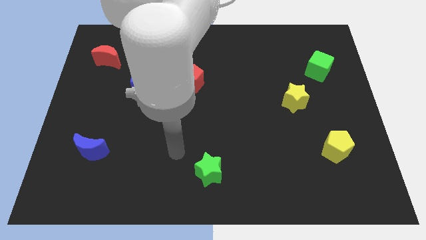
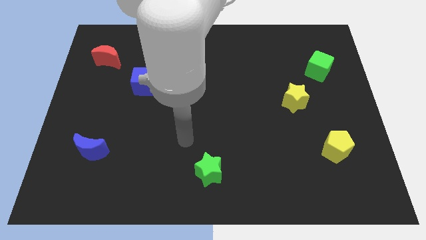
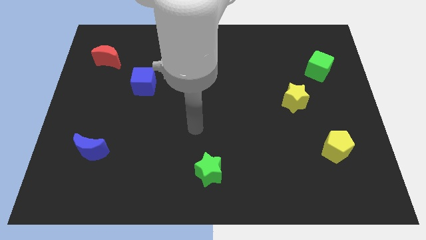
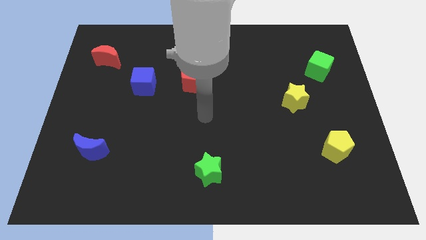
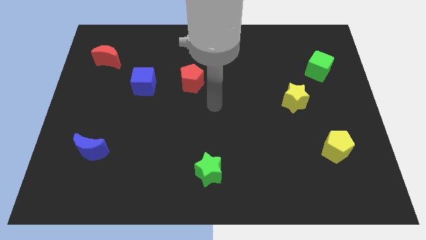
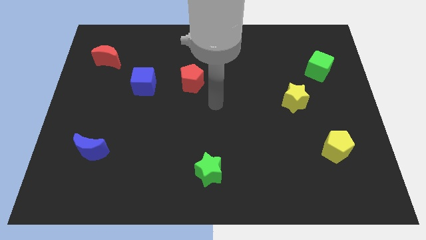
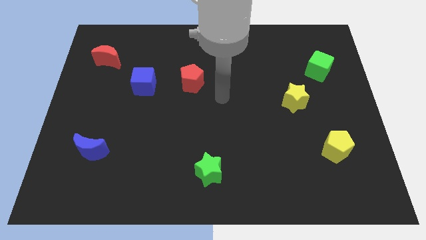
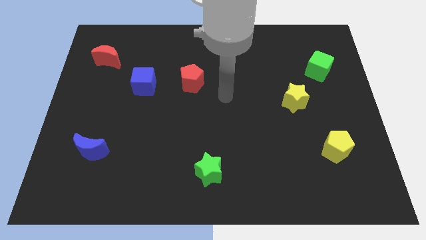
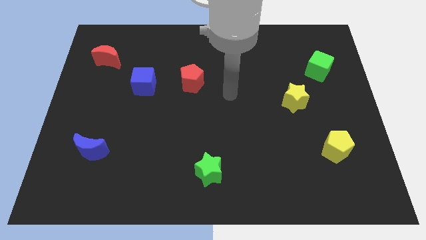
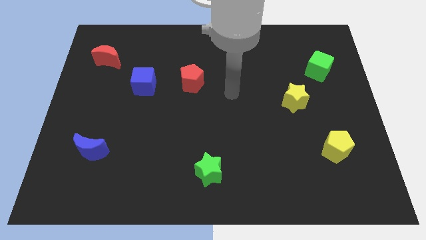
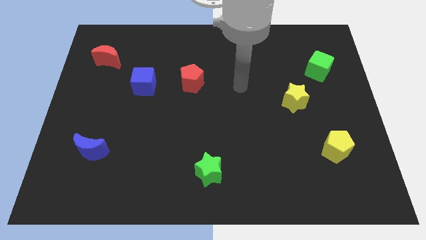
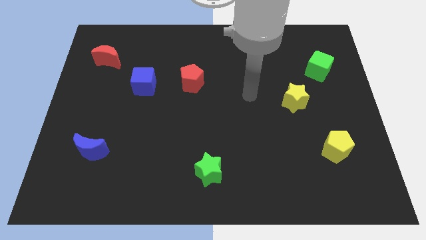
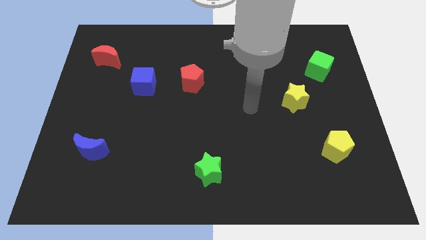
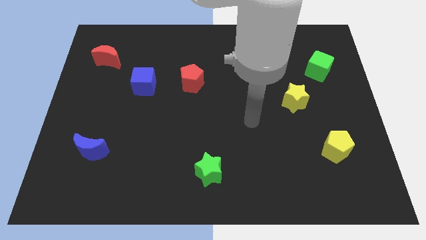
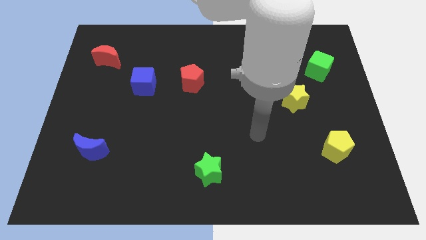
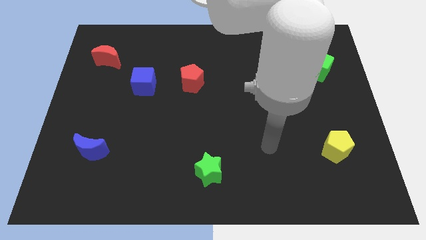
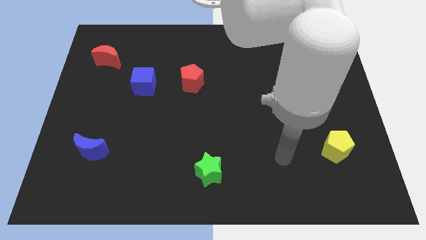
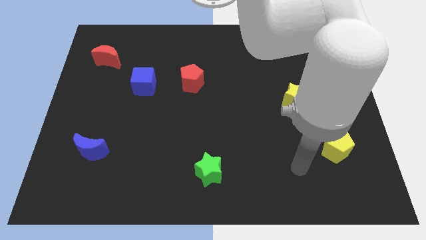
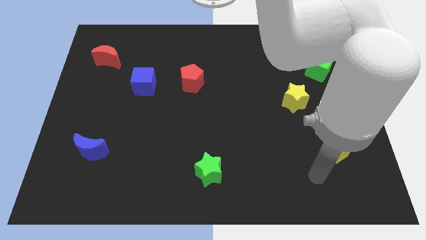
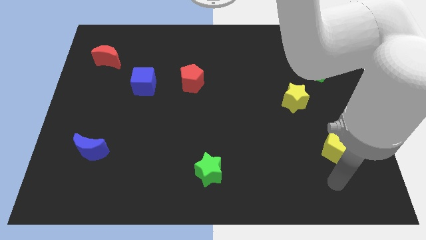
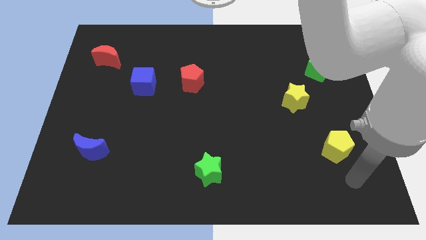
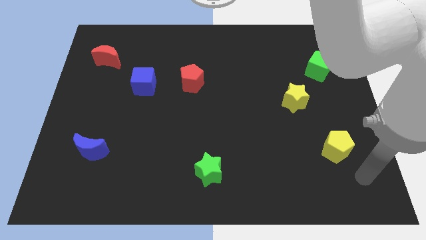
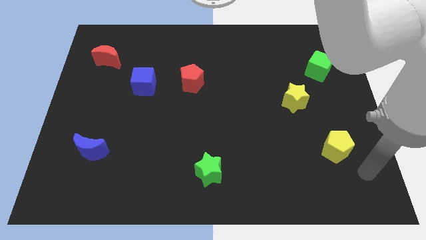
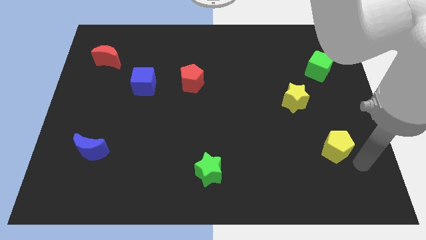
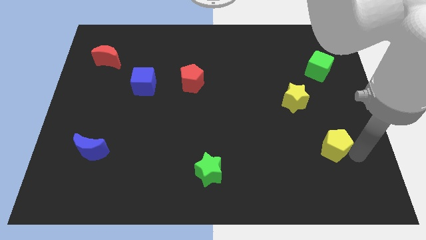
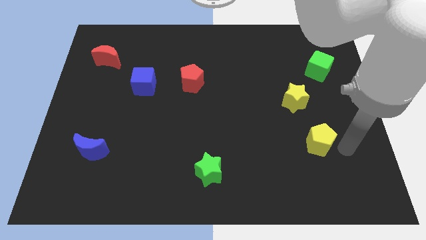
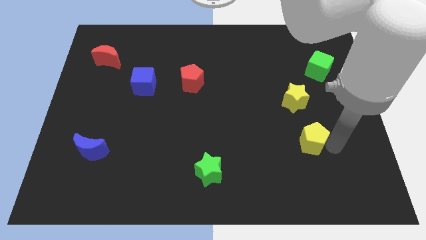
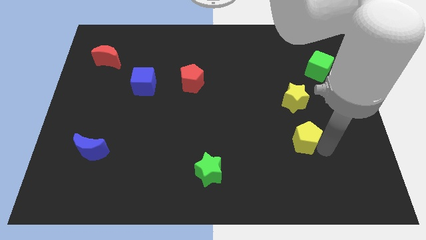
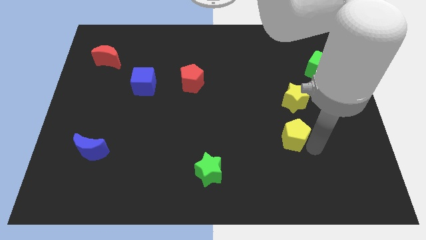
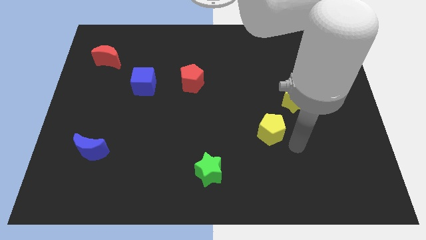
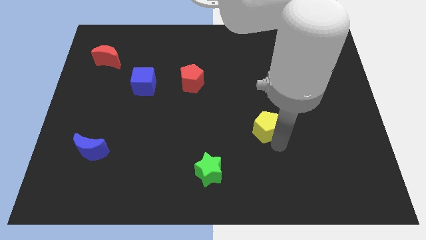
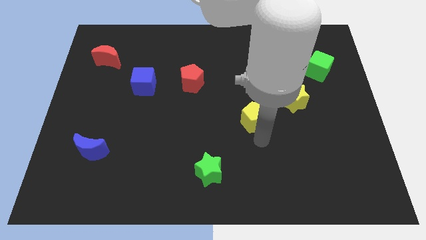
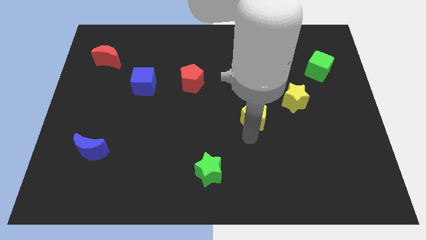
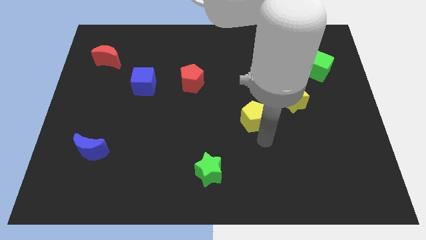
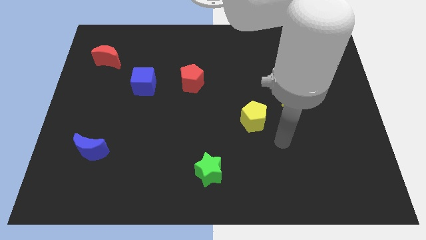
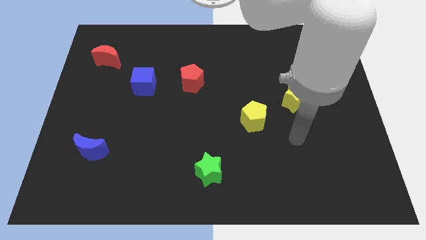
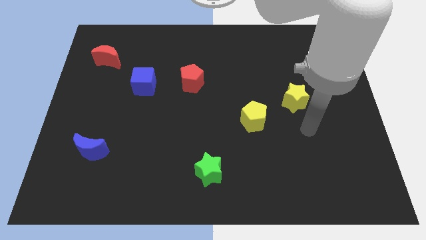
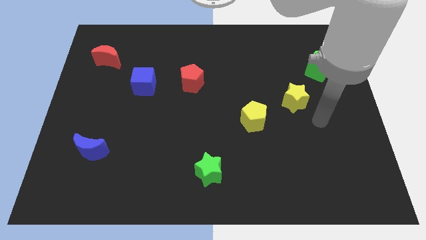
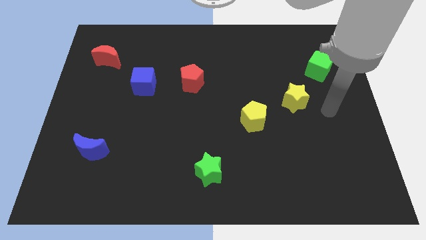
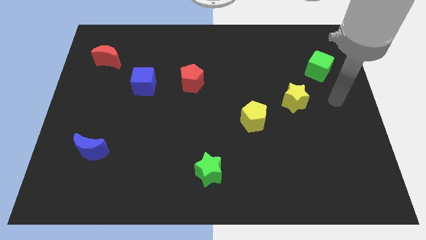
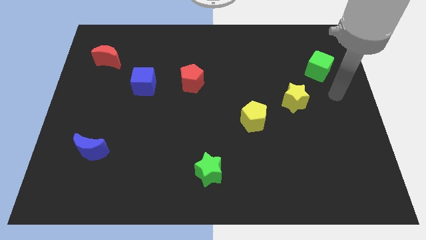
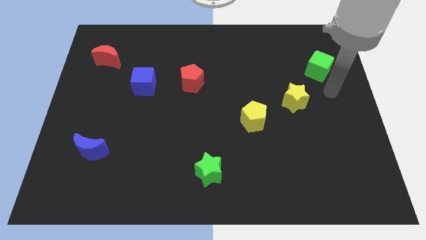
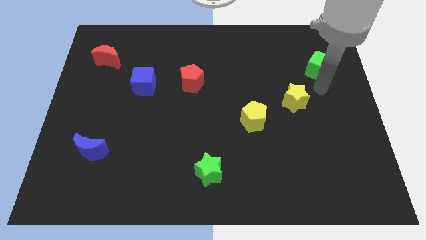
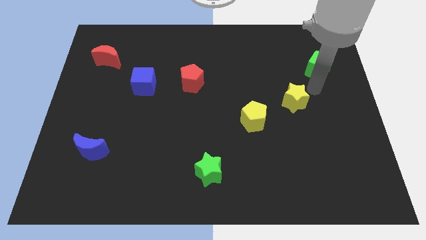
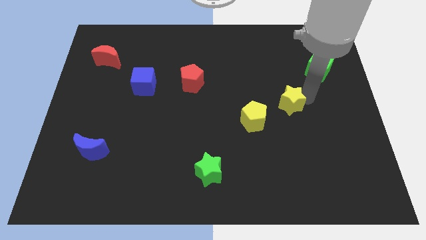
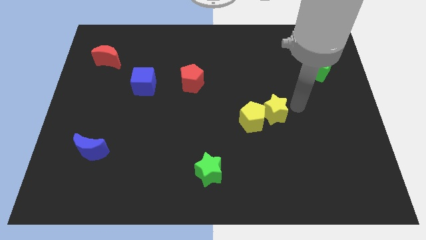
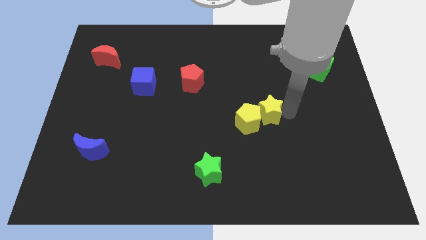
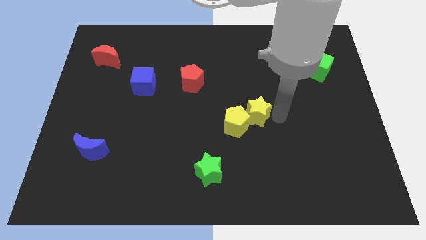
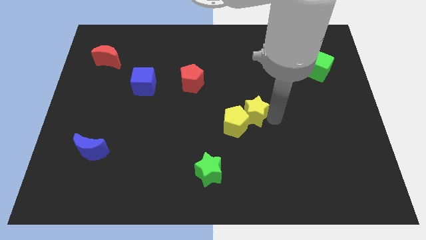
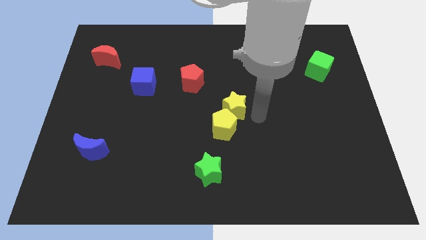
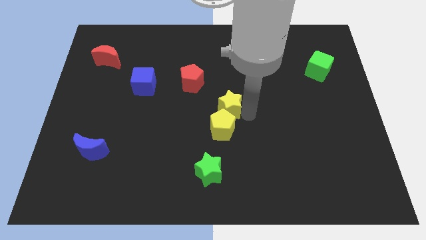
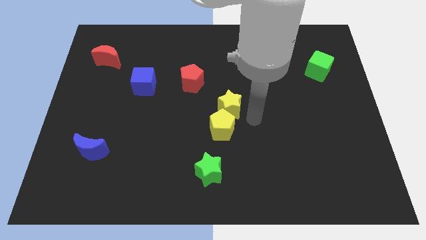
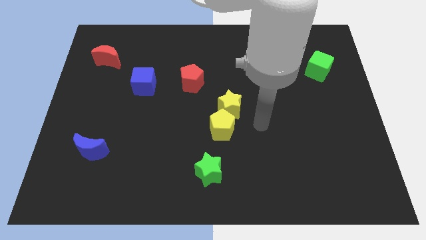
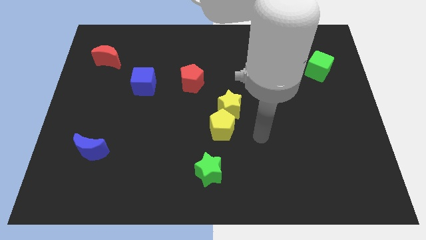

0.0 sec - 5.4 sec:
move the yellow blocks at the center of the board

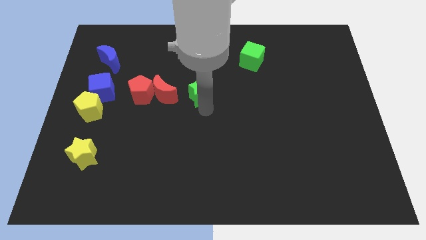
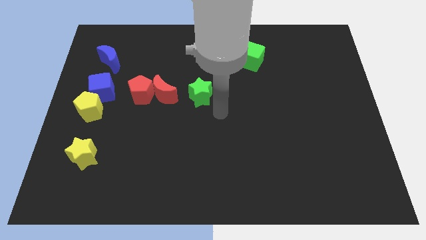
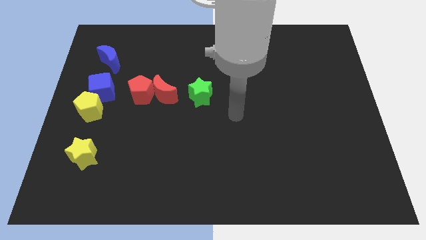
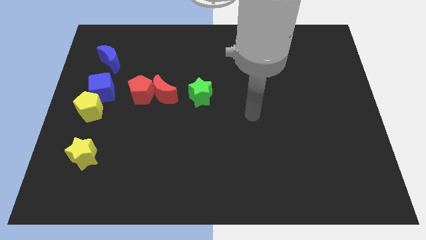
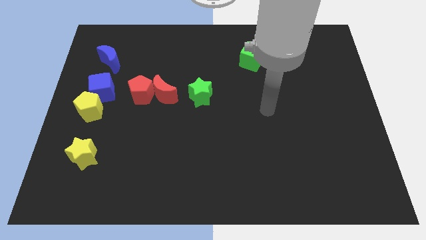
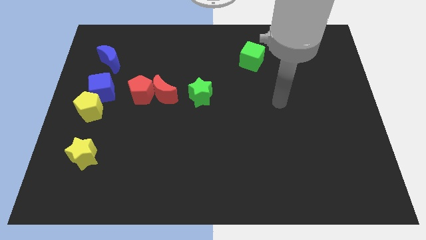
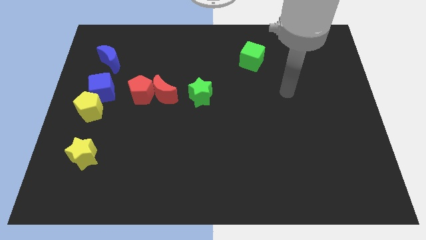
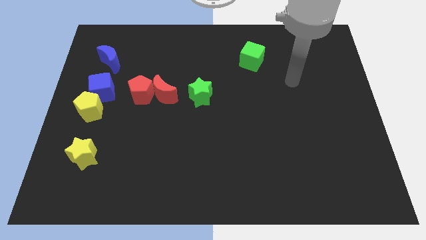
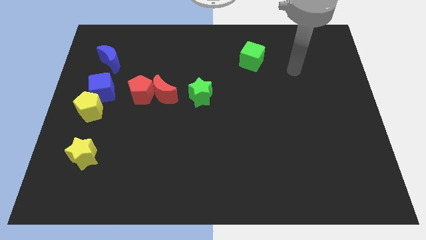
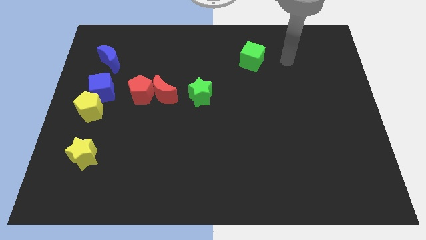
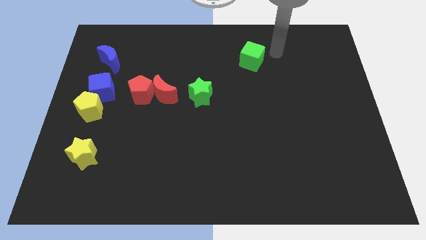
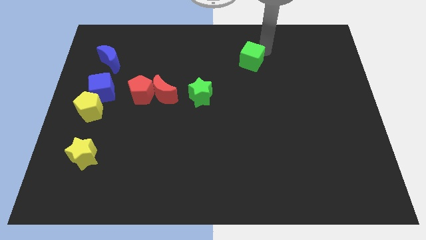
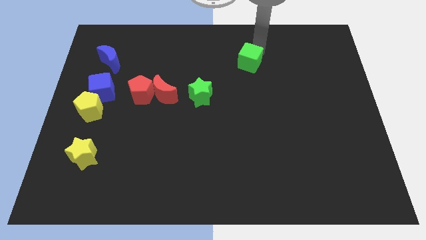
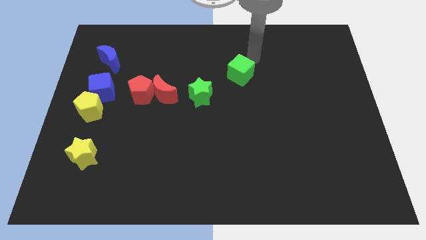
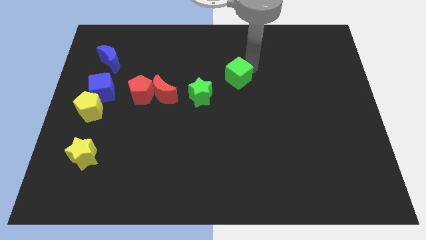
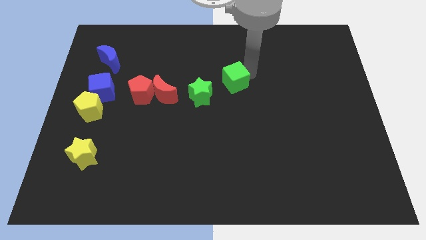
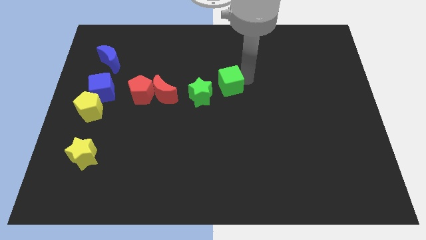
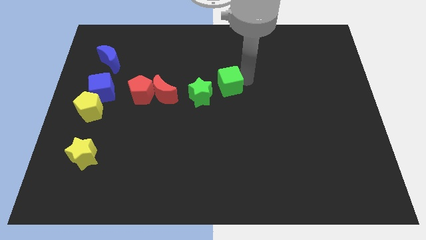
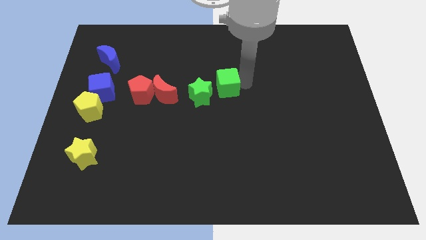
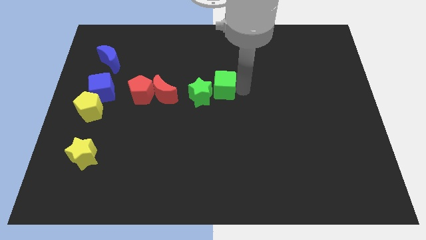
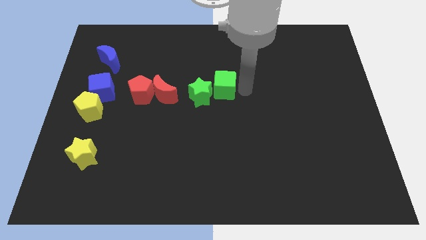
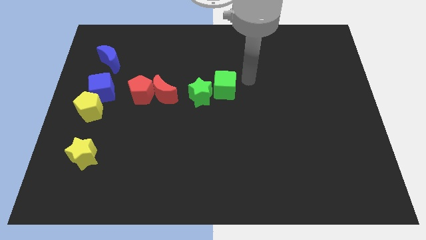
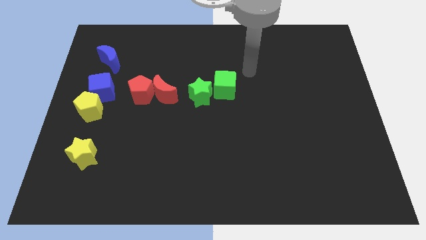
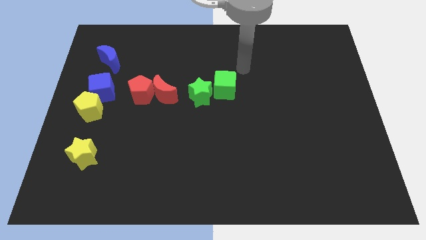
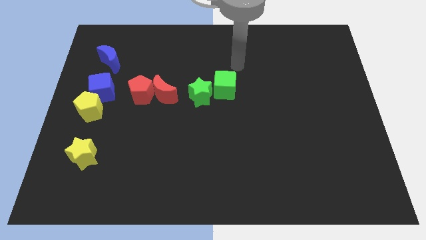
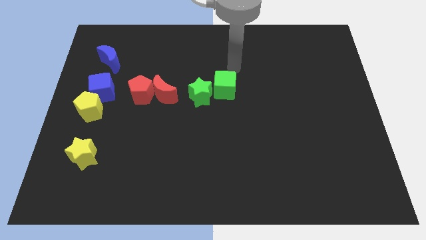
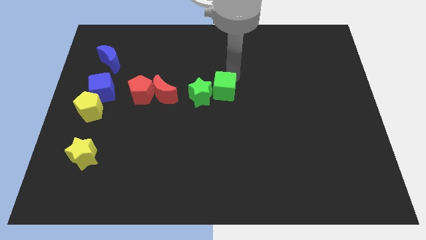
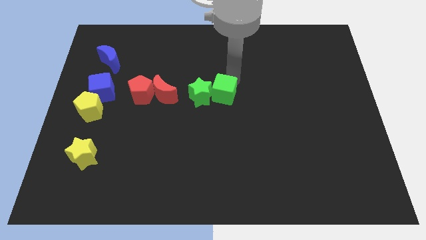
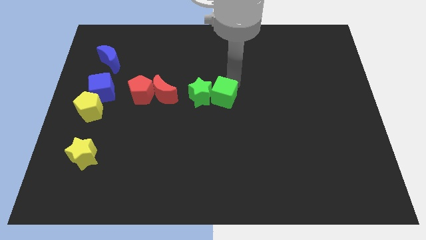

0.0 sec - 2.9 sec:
push the green cube in the center

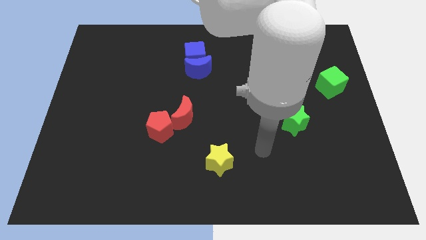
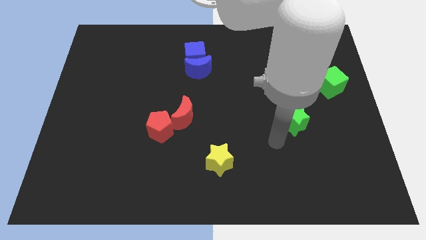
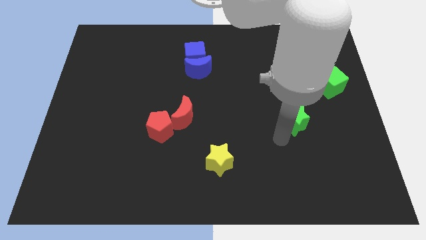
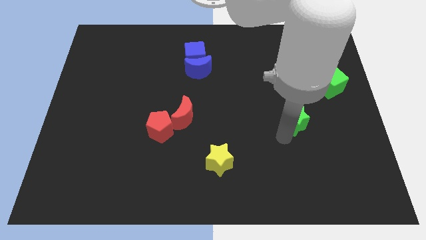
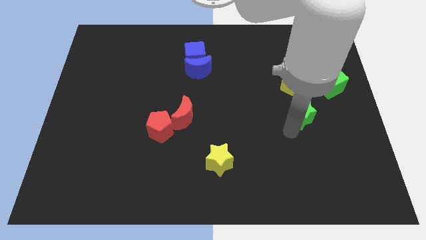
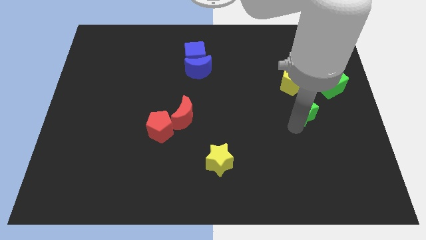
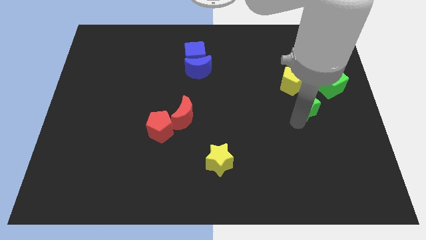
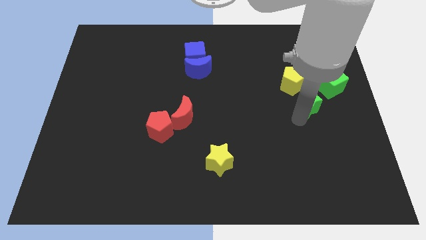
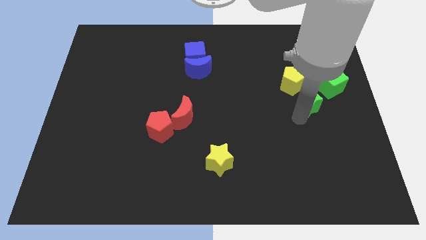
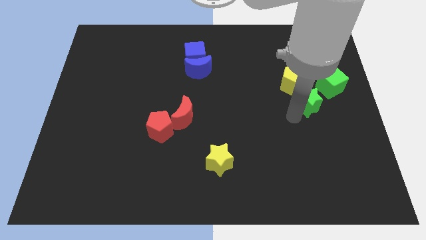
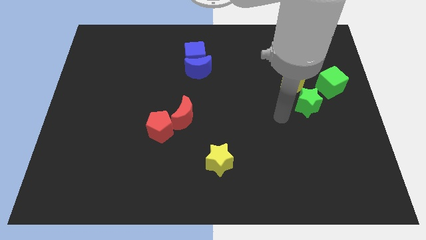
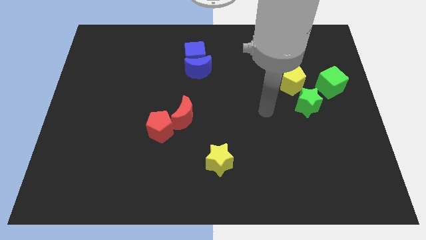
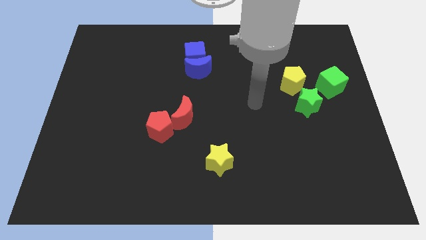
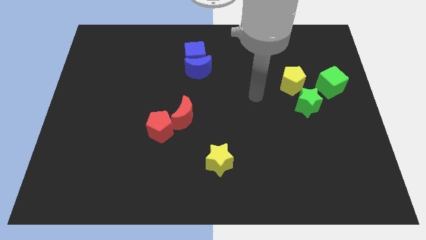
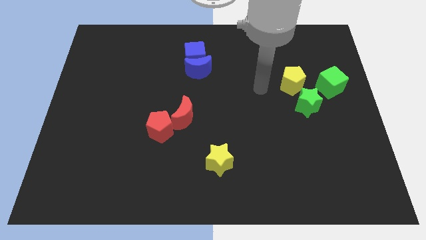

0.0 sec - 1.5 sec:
move the green star diagonally top right to yellow star
